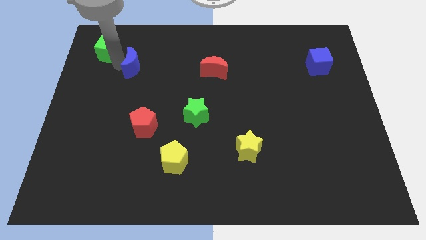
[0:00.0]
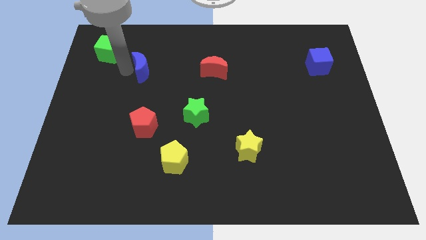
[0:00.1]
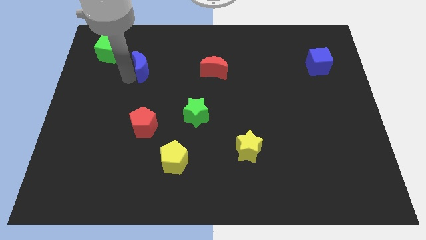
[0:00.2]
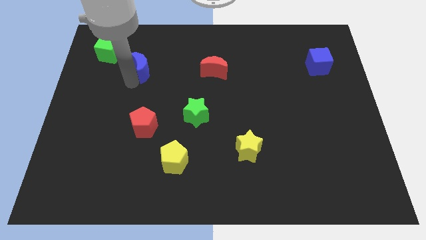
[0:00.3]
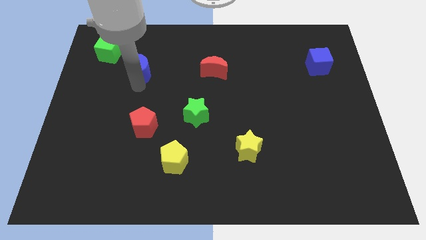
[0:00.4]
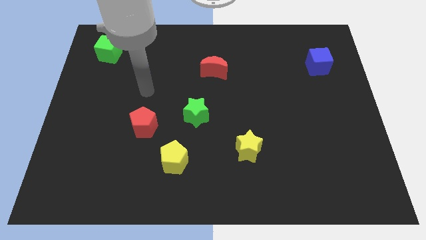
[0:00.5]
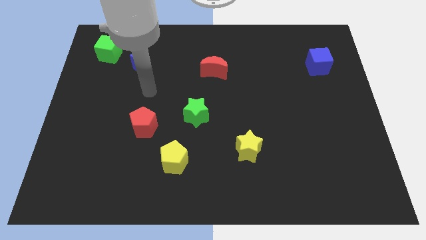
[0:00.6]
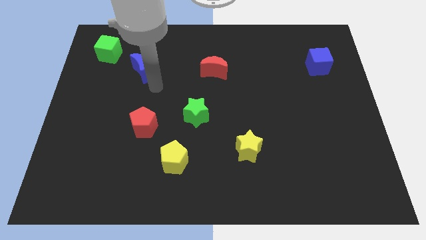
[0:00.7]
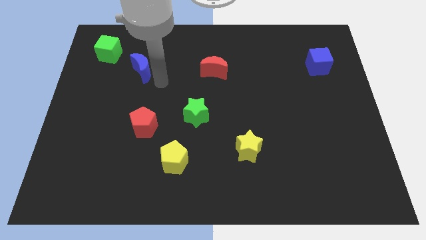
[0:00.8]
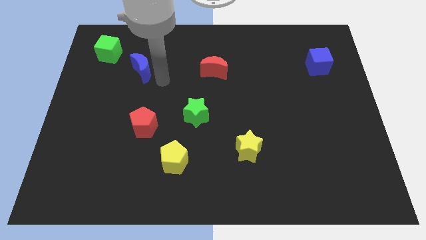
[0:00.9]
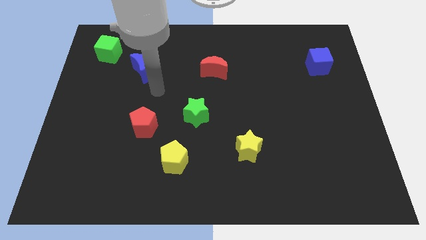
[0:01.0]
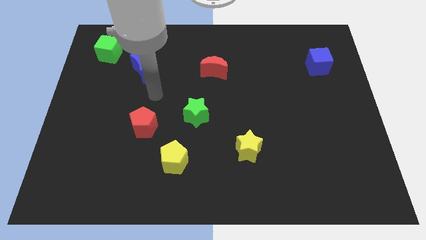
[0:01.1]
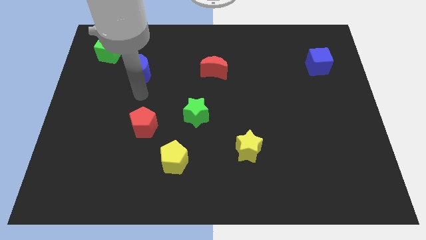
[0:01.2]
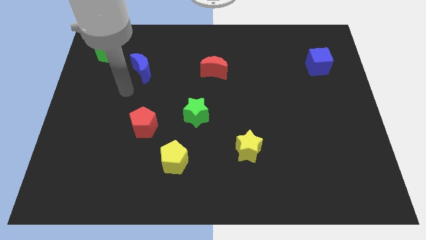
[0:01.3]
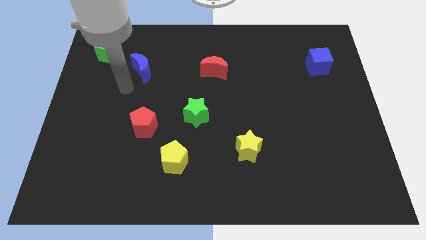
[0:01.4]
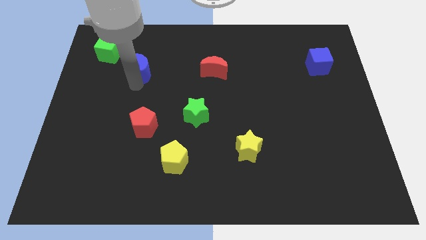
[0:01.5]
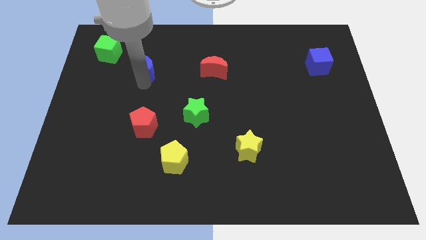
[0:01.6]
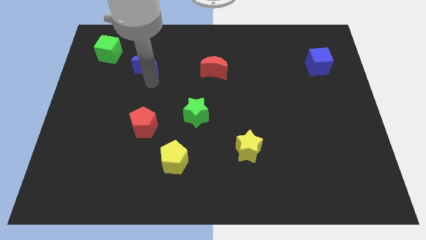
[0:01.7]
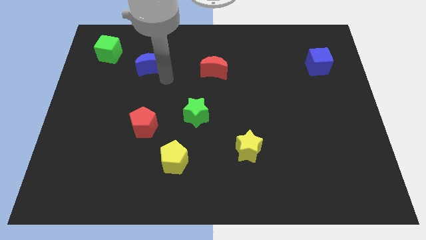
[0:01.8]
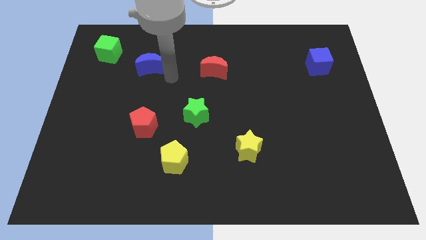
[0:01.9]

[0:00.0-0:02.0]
move the blue moon to the left of the red moon

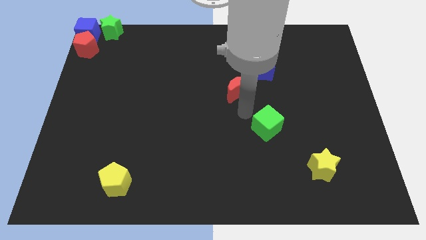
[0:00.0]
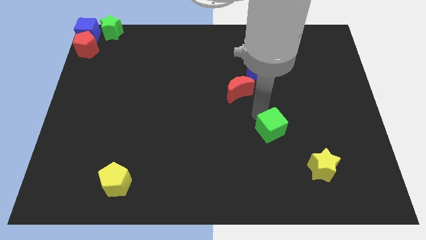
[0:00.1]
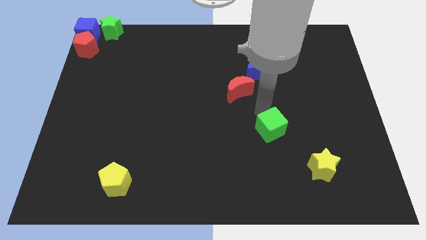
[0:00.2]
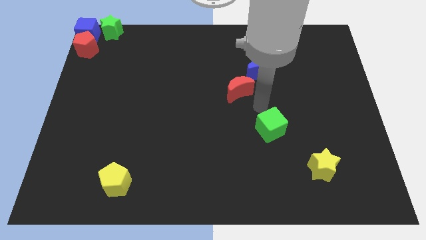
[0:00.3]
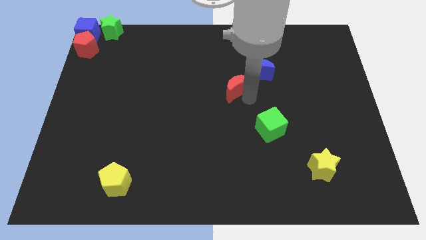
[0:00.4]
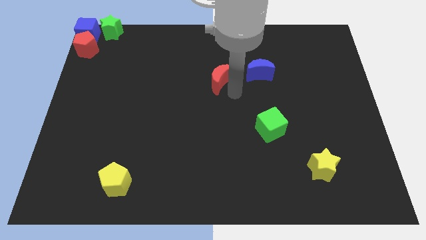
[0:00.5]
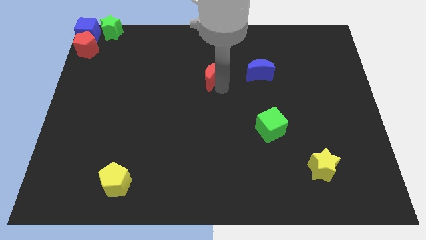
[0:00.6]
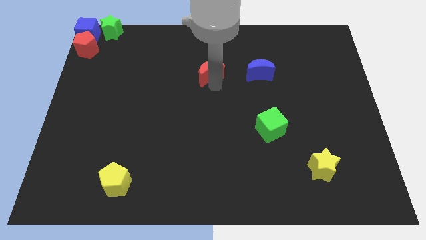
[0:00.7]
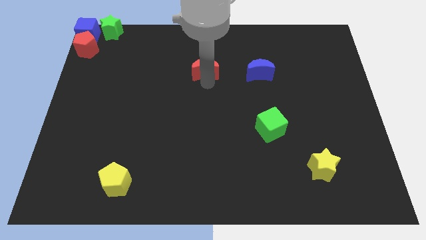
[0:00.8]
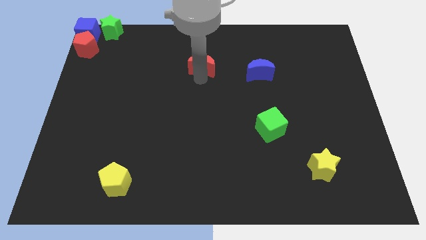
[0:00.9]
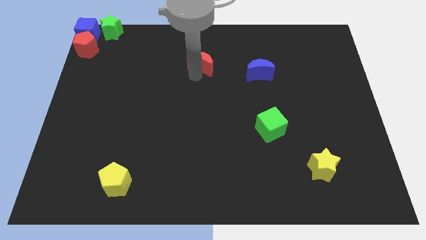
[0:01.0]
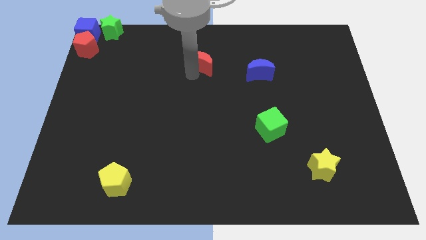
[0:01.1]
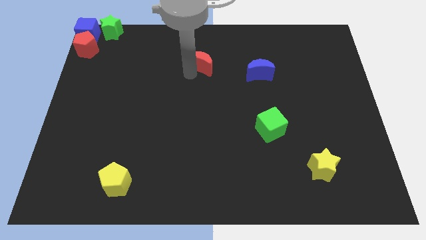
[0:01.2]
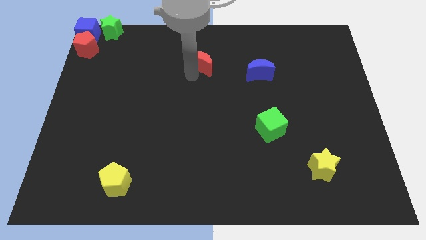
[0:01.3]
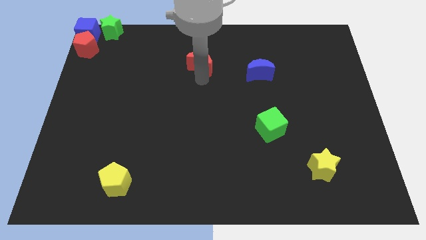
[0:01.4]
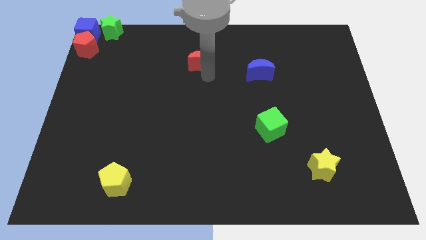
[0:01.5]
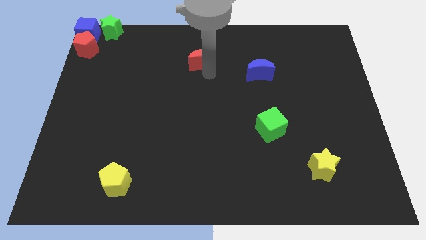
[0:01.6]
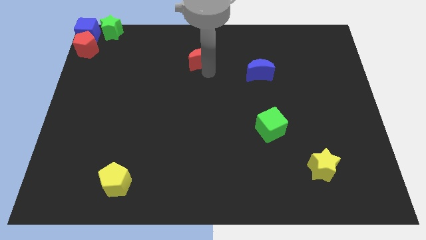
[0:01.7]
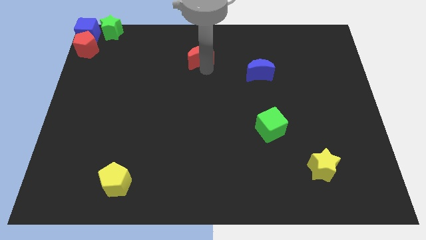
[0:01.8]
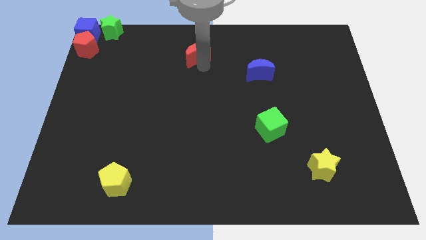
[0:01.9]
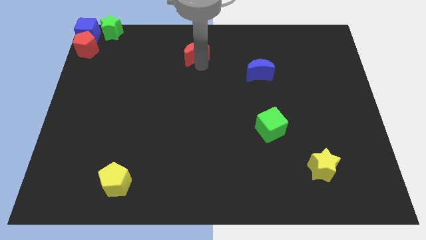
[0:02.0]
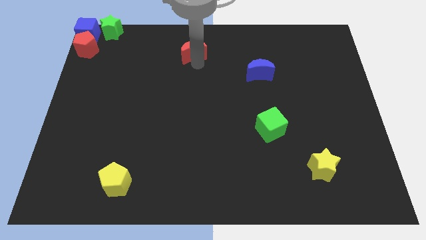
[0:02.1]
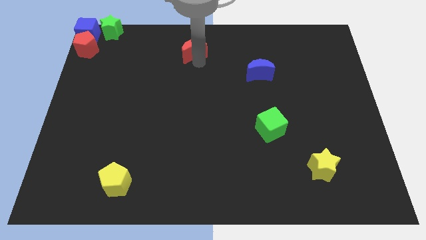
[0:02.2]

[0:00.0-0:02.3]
move the red crescent to the top center of the board

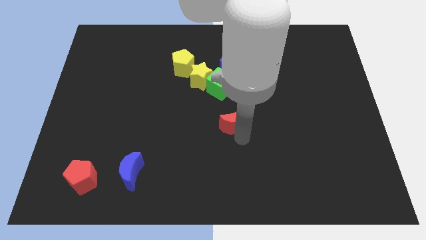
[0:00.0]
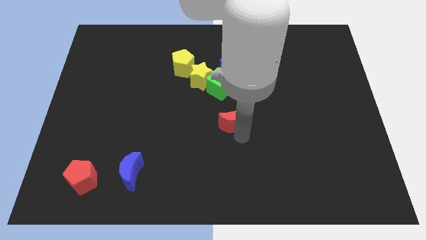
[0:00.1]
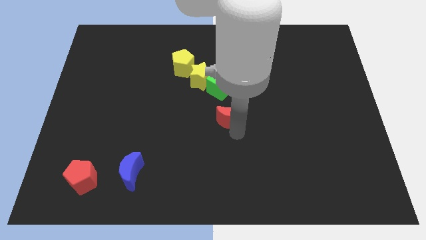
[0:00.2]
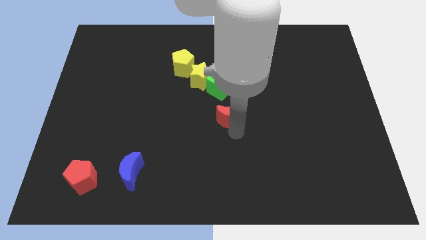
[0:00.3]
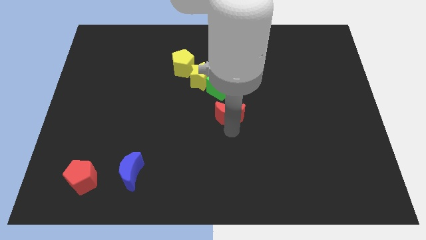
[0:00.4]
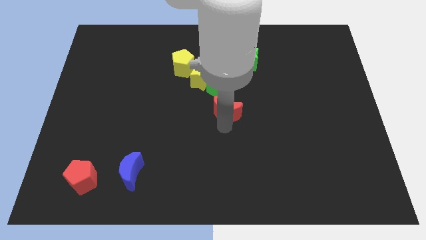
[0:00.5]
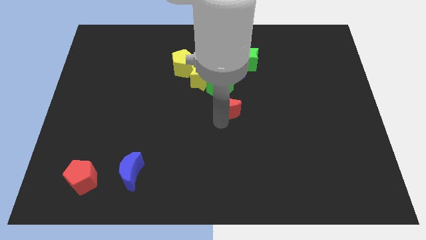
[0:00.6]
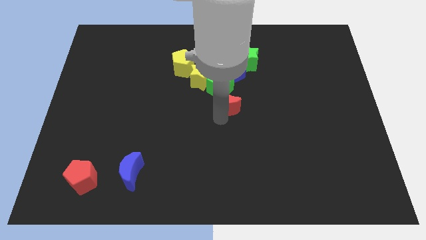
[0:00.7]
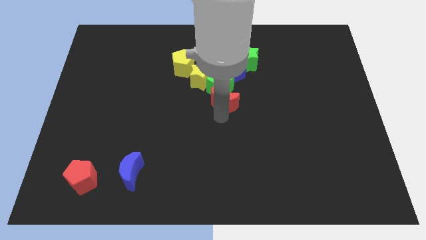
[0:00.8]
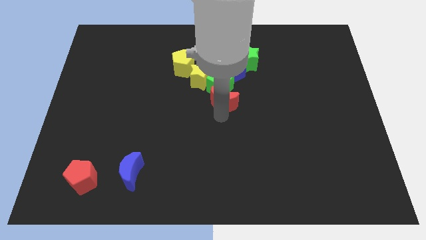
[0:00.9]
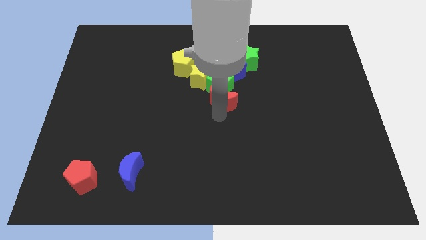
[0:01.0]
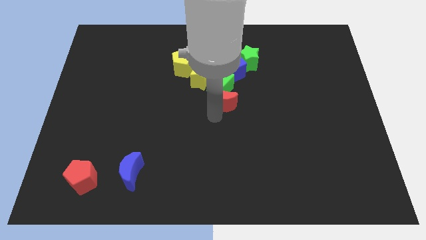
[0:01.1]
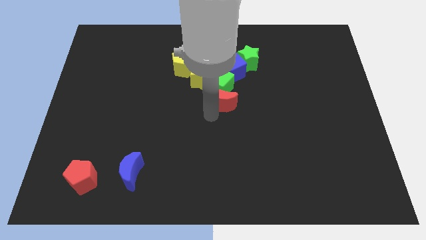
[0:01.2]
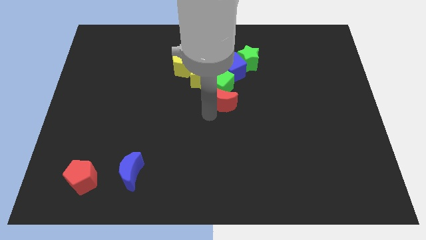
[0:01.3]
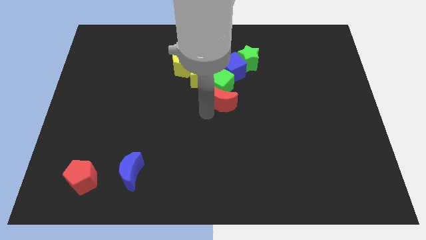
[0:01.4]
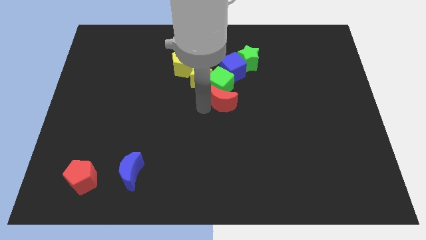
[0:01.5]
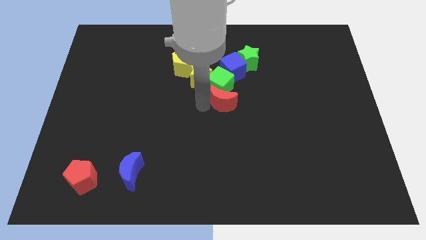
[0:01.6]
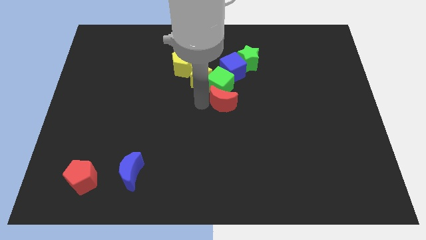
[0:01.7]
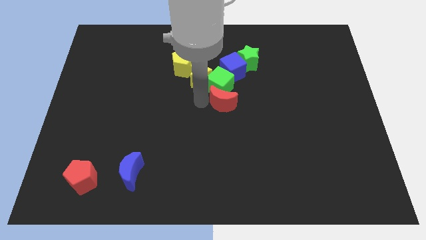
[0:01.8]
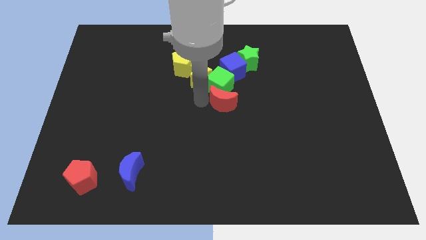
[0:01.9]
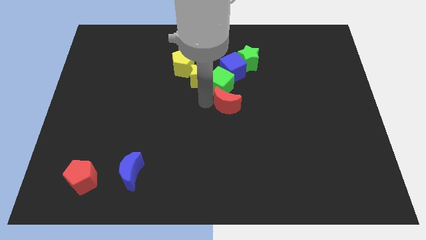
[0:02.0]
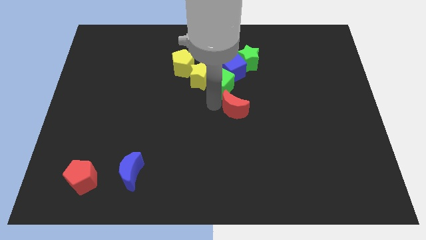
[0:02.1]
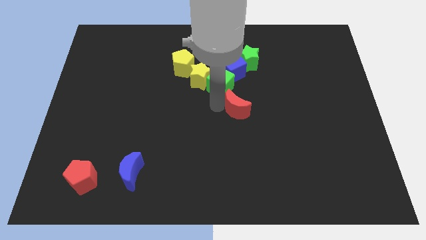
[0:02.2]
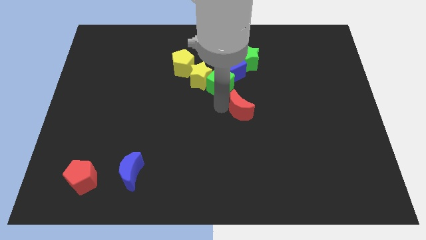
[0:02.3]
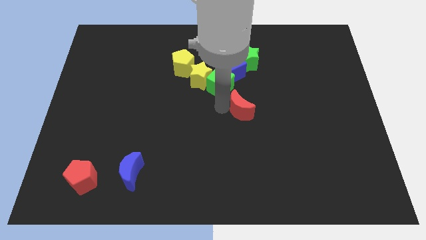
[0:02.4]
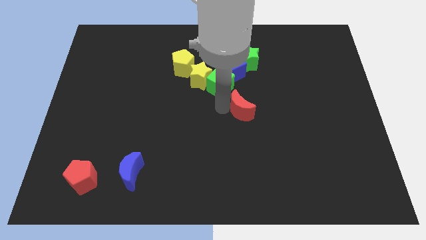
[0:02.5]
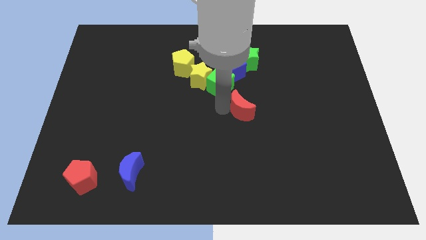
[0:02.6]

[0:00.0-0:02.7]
move the red crescent diagonally at the bottom of the green cube

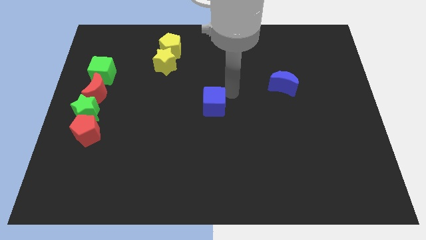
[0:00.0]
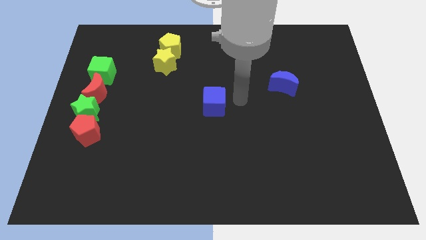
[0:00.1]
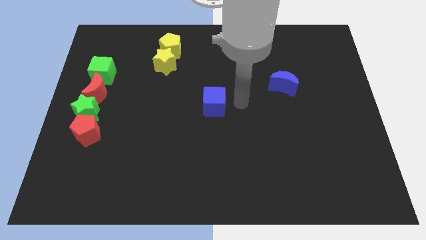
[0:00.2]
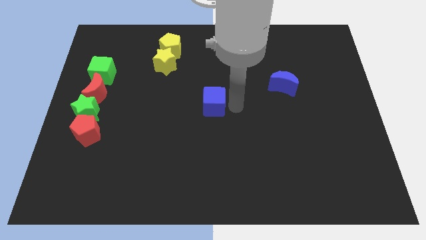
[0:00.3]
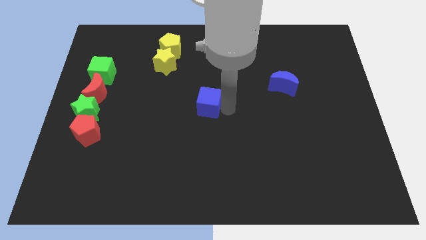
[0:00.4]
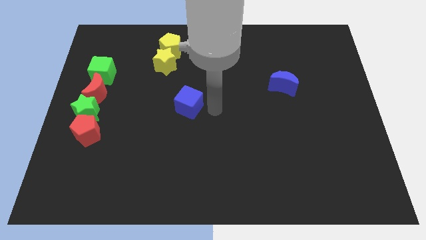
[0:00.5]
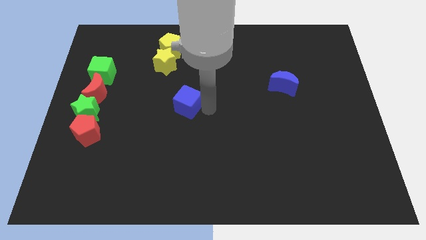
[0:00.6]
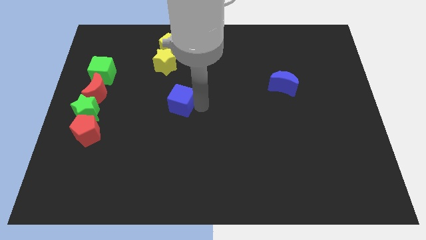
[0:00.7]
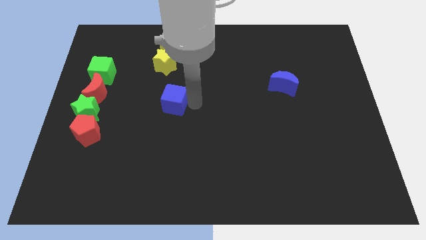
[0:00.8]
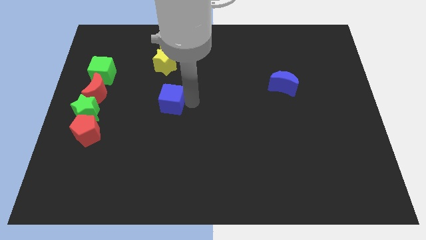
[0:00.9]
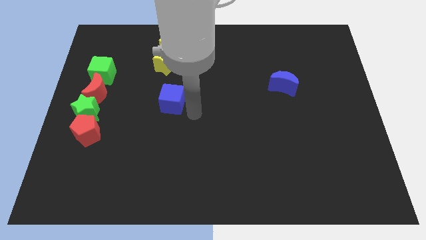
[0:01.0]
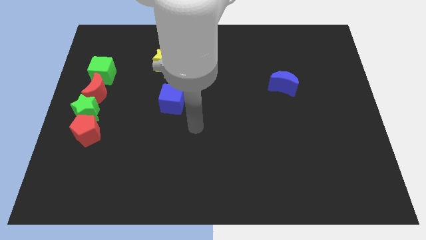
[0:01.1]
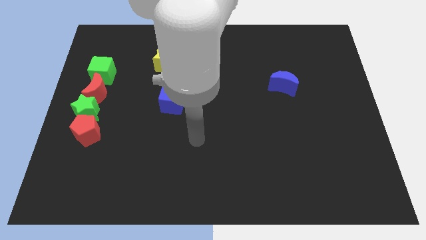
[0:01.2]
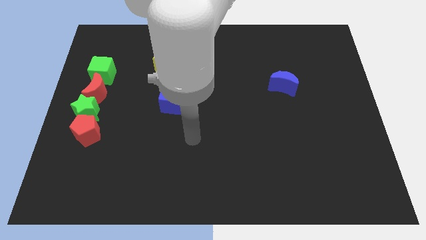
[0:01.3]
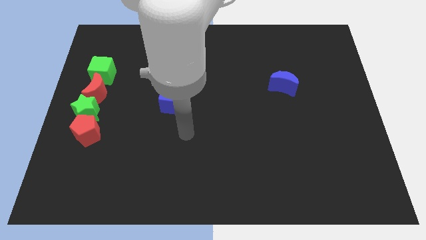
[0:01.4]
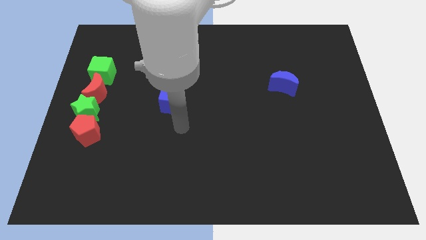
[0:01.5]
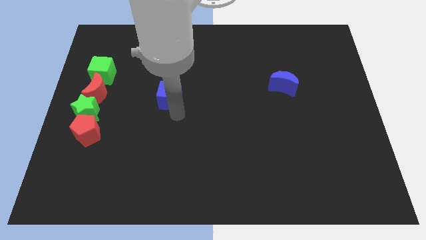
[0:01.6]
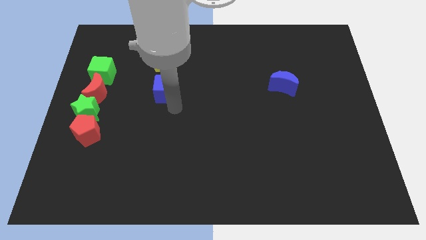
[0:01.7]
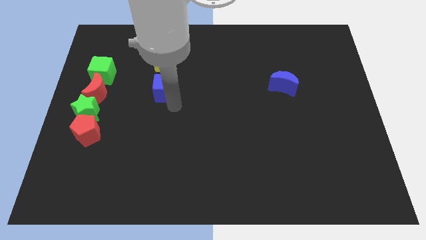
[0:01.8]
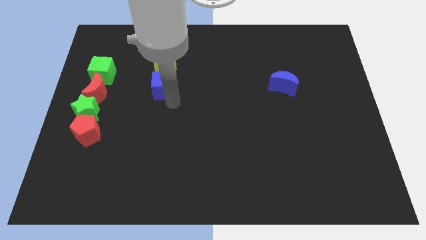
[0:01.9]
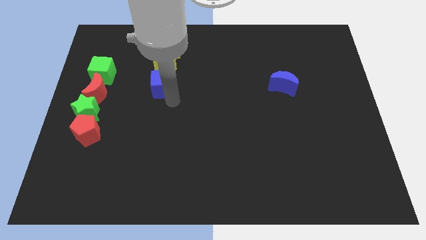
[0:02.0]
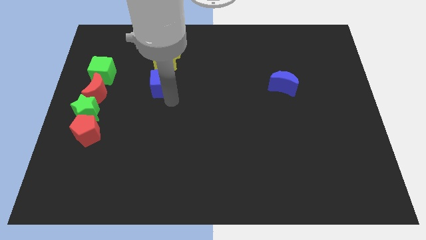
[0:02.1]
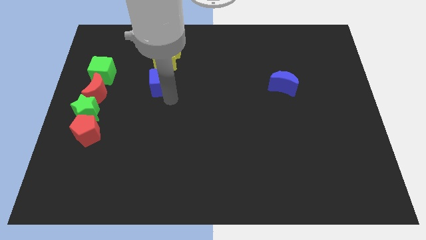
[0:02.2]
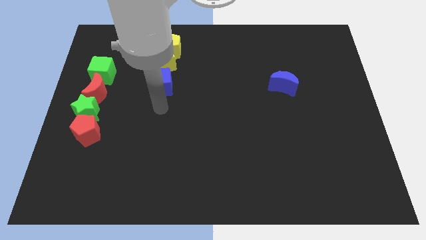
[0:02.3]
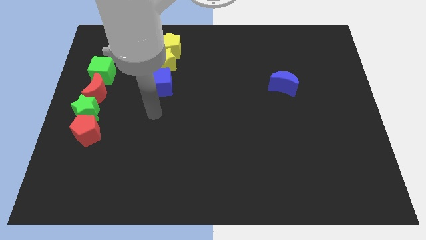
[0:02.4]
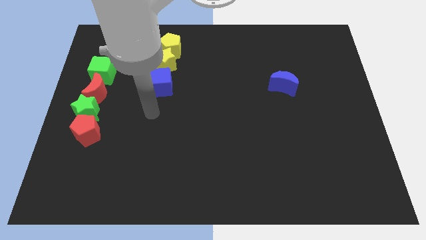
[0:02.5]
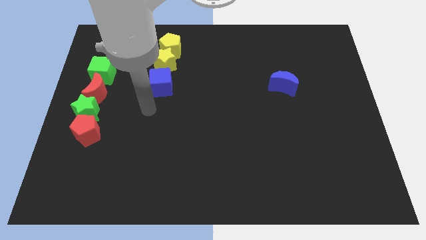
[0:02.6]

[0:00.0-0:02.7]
place blue cube below yellow star
